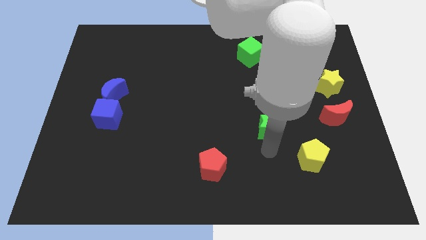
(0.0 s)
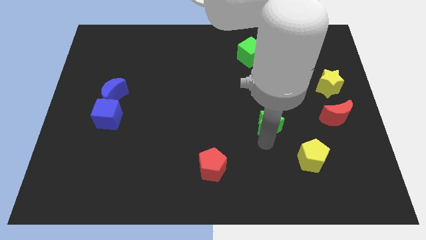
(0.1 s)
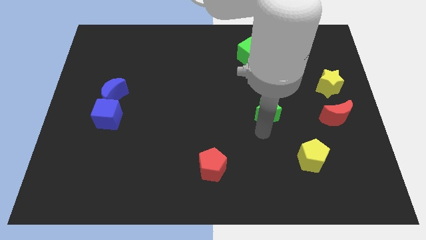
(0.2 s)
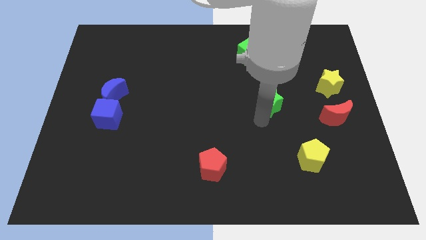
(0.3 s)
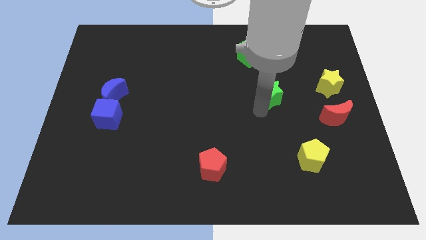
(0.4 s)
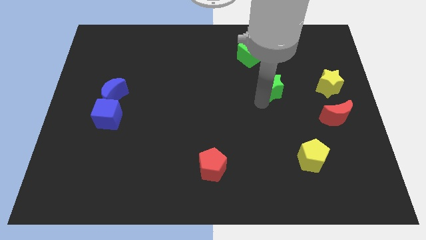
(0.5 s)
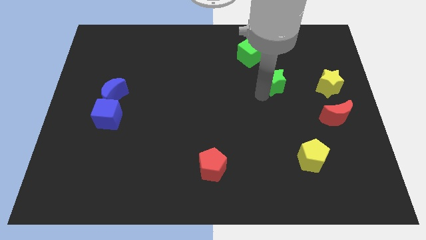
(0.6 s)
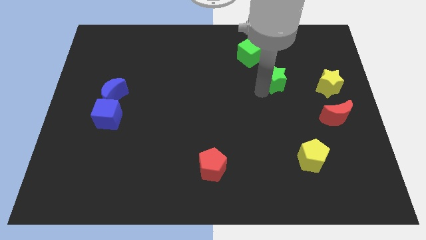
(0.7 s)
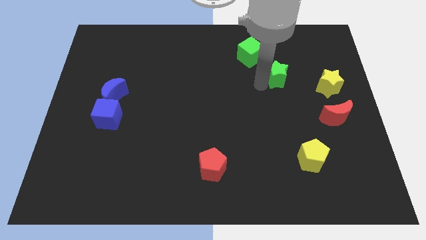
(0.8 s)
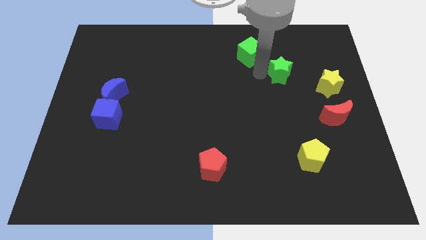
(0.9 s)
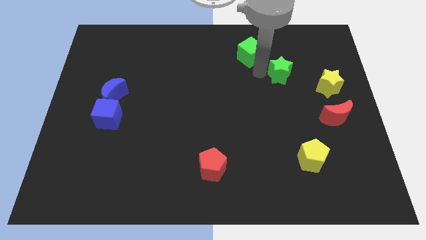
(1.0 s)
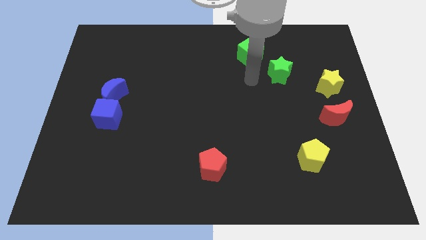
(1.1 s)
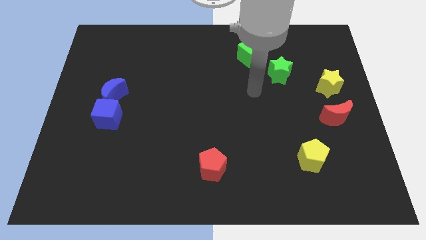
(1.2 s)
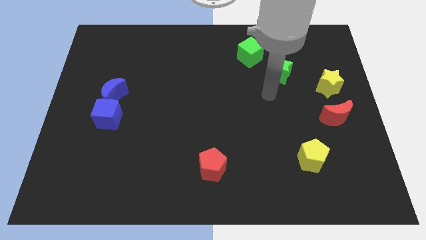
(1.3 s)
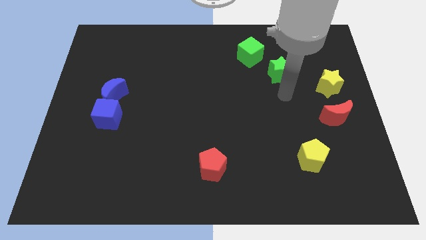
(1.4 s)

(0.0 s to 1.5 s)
push the green star to the bottom right side of the green cube

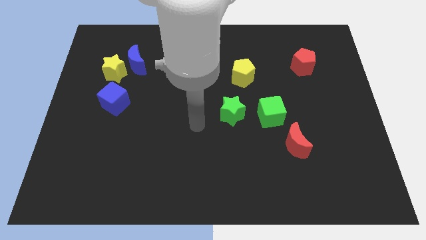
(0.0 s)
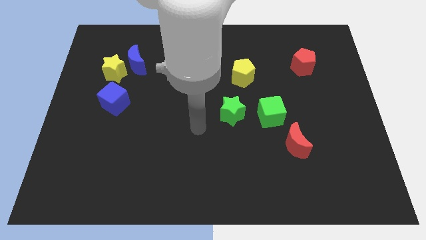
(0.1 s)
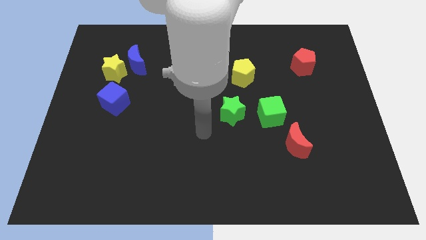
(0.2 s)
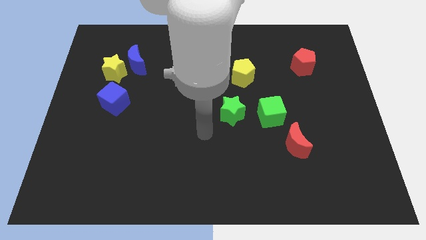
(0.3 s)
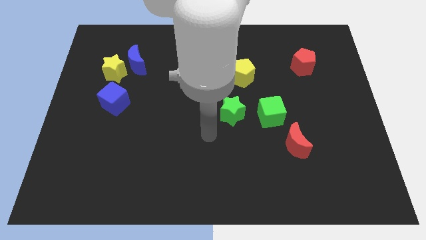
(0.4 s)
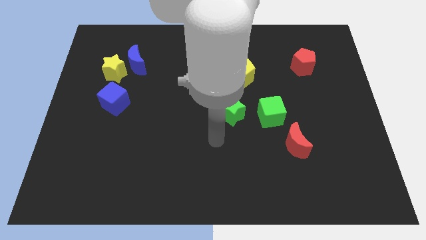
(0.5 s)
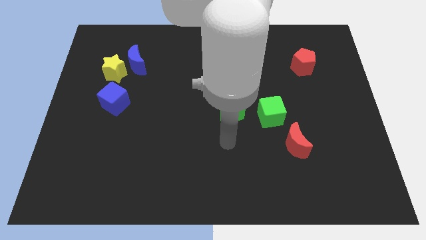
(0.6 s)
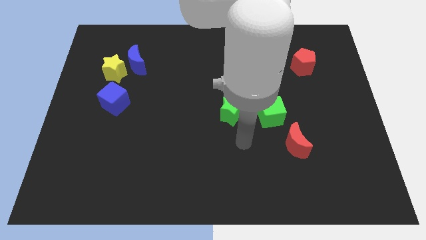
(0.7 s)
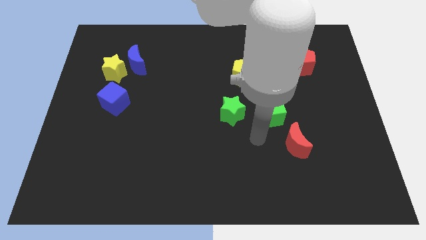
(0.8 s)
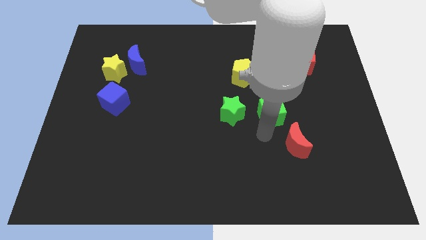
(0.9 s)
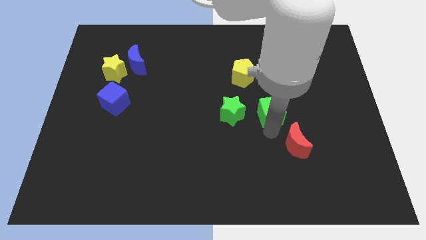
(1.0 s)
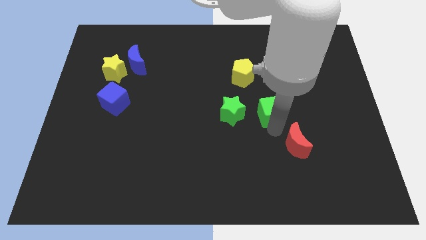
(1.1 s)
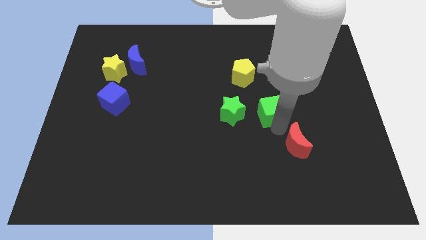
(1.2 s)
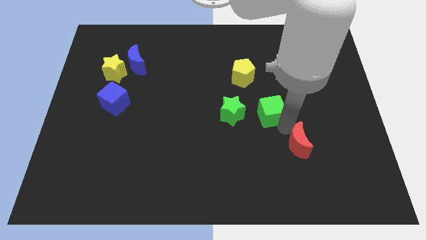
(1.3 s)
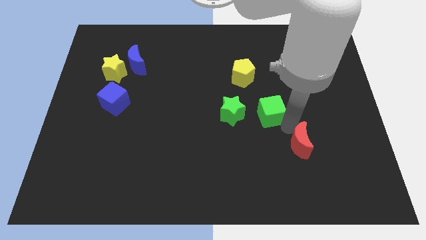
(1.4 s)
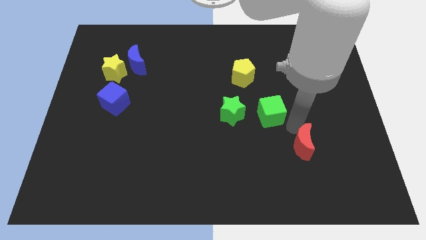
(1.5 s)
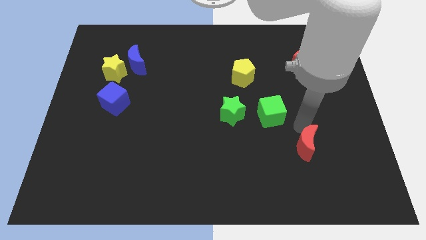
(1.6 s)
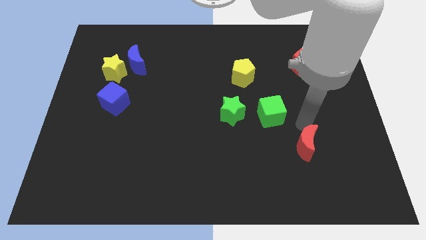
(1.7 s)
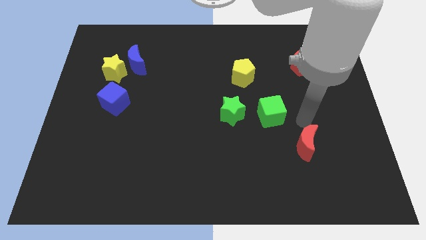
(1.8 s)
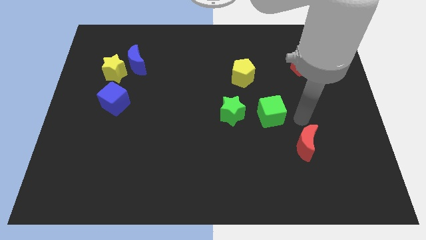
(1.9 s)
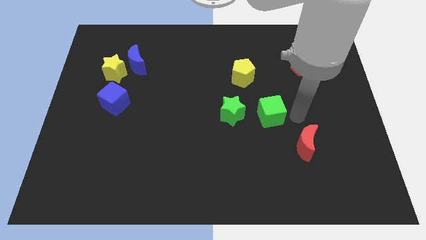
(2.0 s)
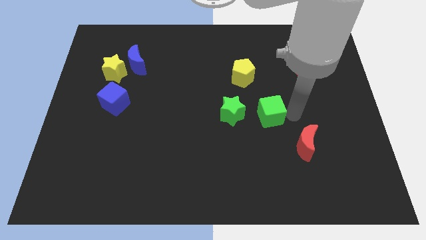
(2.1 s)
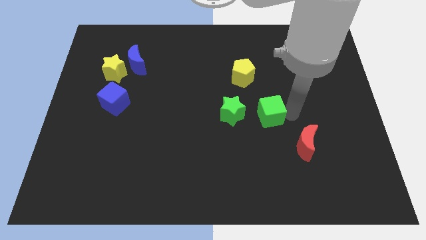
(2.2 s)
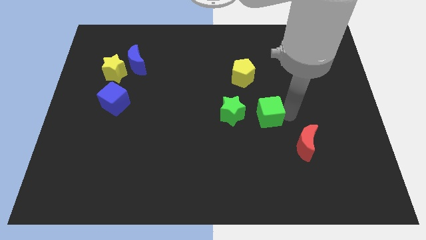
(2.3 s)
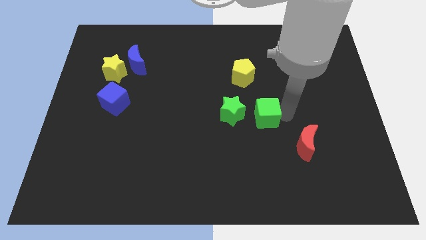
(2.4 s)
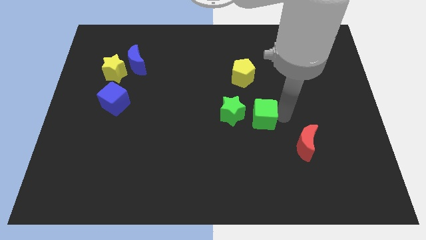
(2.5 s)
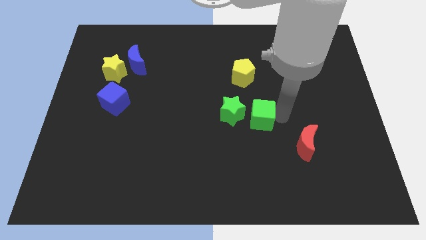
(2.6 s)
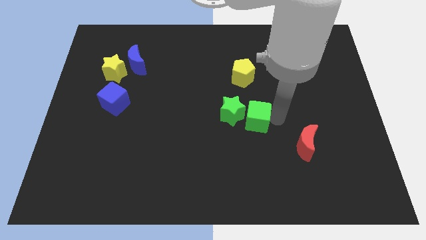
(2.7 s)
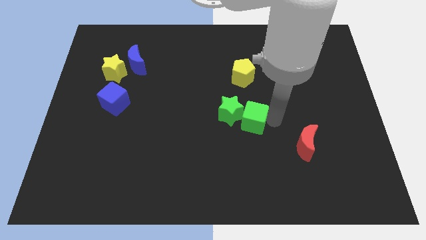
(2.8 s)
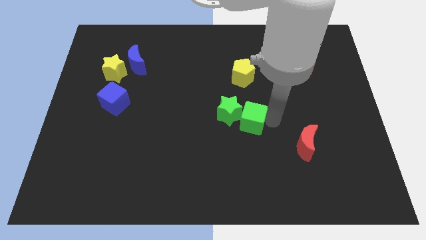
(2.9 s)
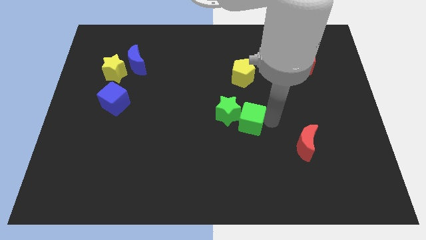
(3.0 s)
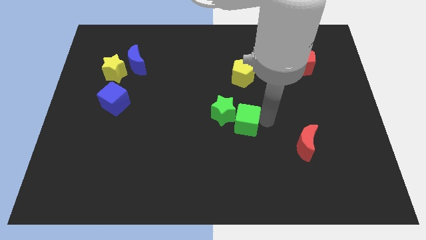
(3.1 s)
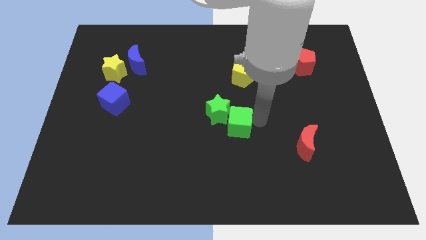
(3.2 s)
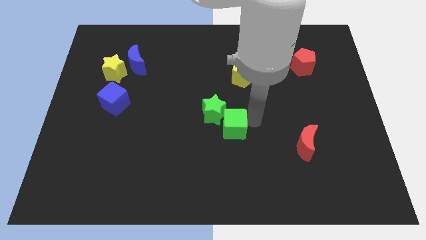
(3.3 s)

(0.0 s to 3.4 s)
move the both green blocks to the center

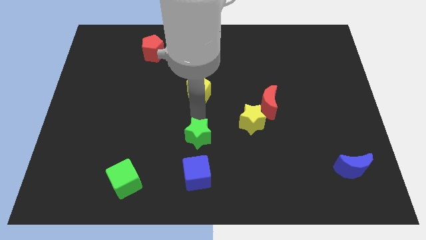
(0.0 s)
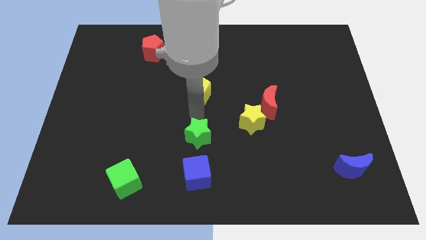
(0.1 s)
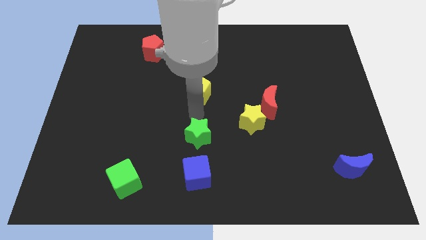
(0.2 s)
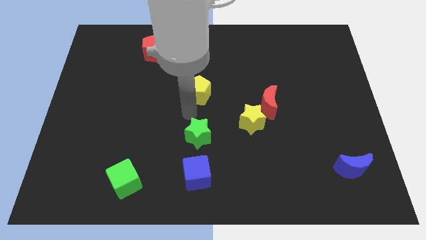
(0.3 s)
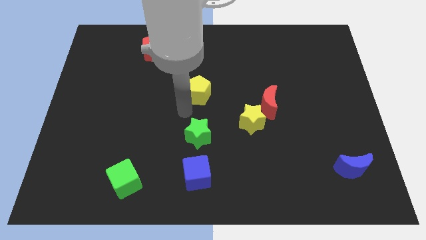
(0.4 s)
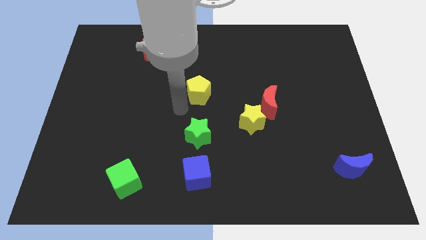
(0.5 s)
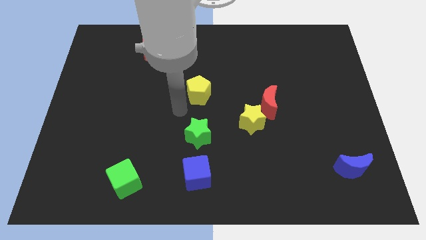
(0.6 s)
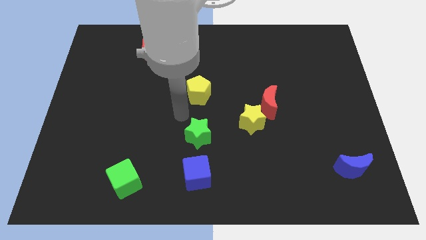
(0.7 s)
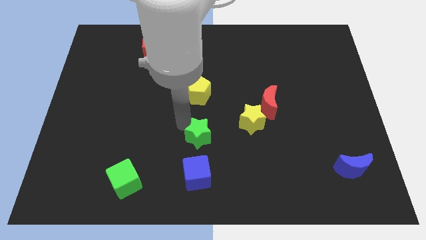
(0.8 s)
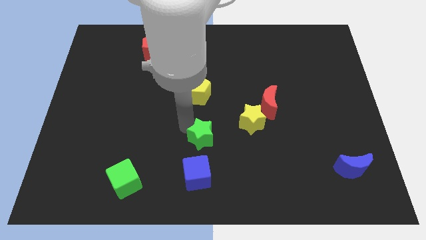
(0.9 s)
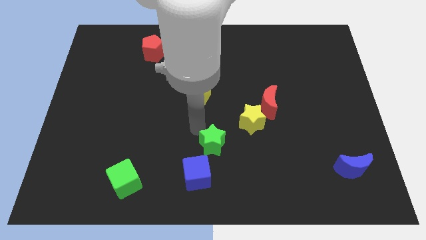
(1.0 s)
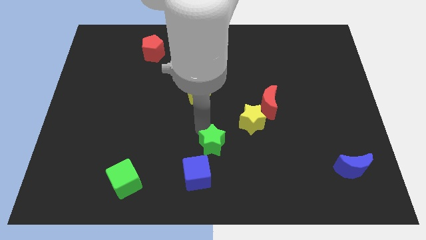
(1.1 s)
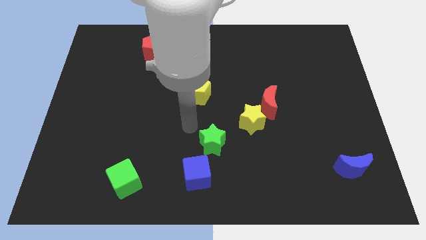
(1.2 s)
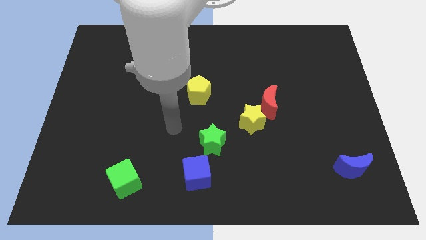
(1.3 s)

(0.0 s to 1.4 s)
push the green cube slightly to the right

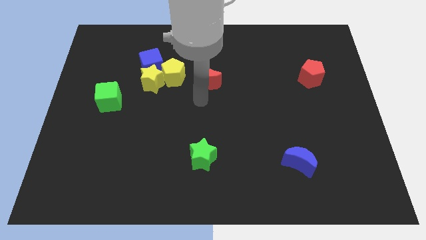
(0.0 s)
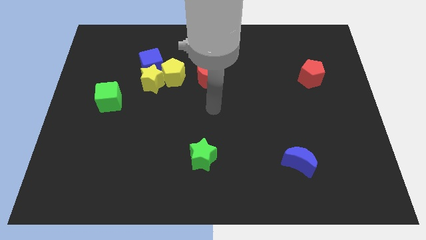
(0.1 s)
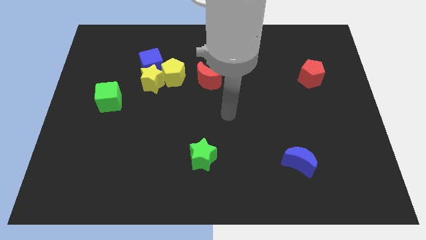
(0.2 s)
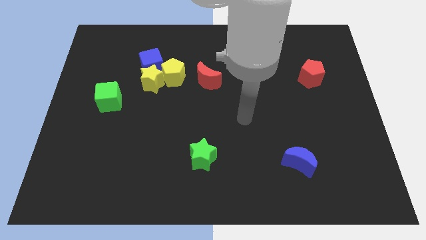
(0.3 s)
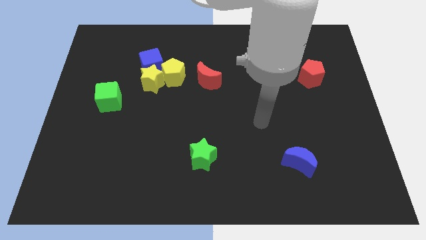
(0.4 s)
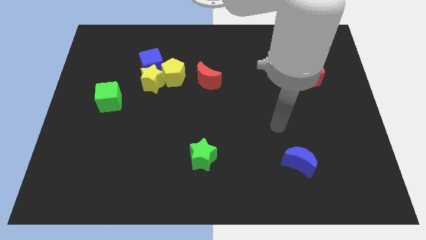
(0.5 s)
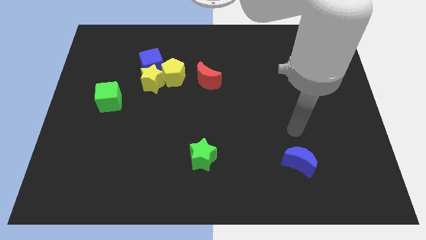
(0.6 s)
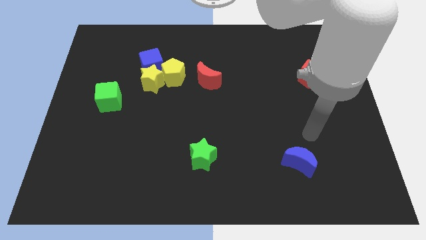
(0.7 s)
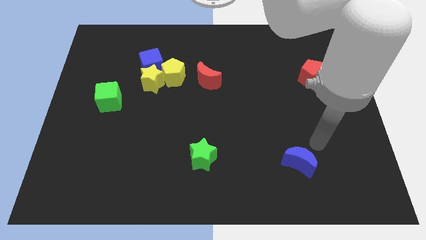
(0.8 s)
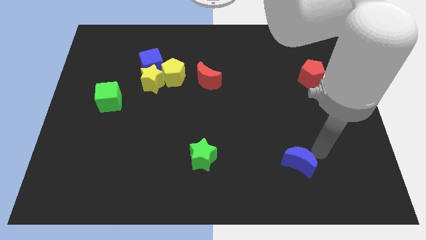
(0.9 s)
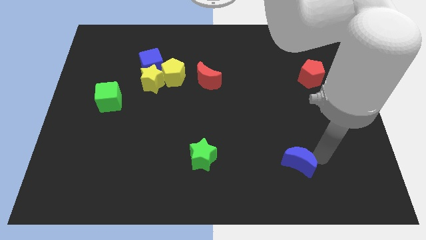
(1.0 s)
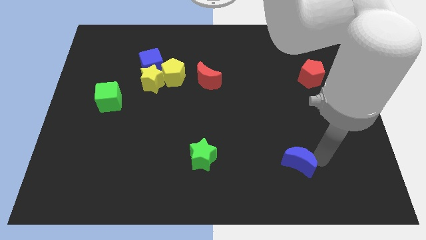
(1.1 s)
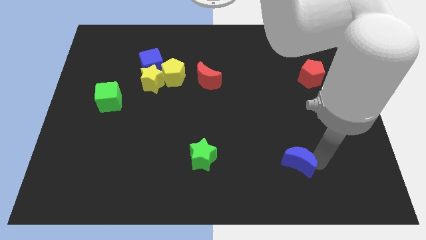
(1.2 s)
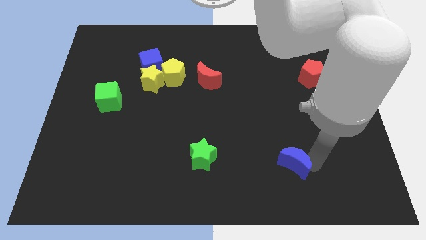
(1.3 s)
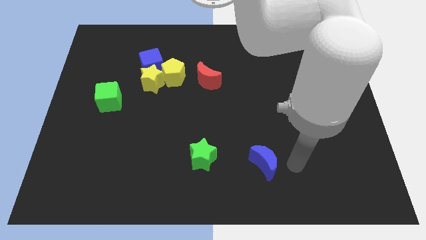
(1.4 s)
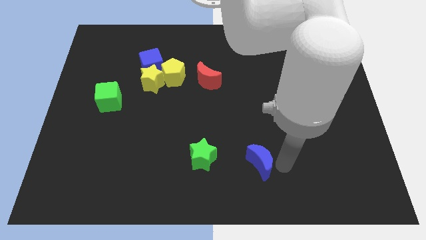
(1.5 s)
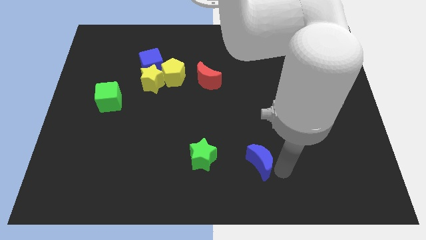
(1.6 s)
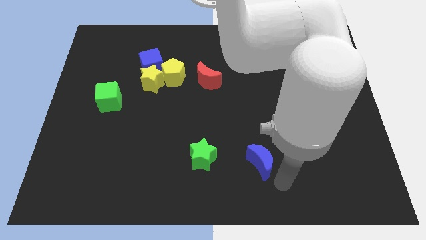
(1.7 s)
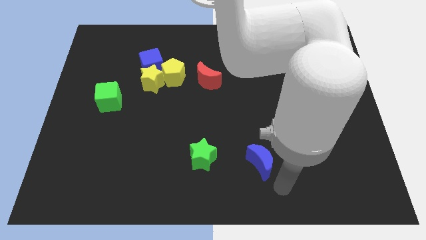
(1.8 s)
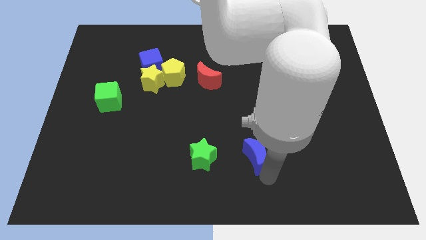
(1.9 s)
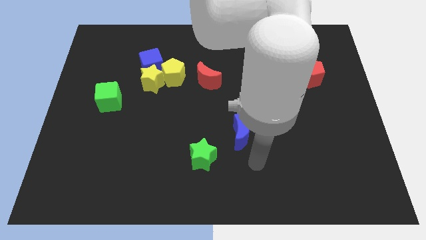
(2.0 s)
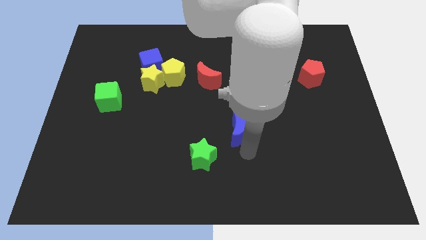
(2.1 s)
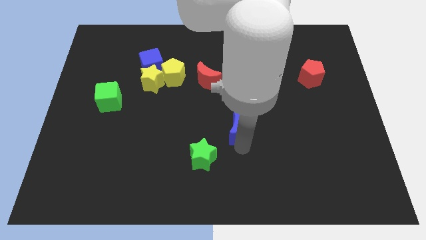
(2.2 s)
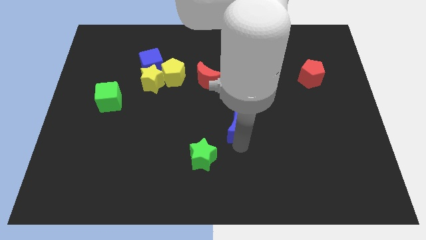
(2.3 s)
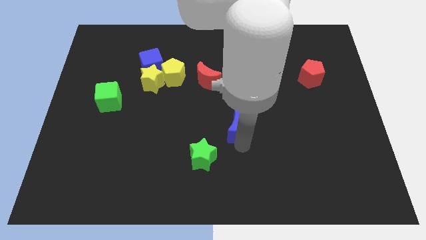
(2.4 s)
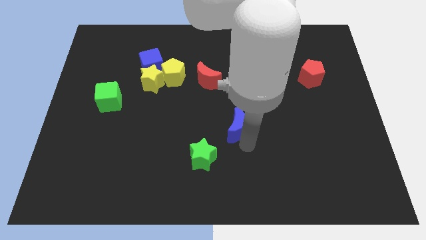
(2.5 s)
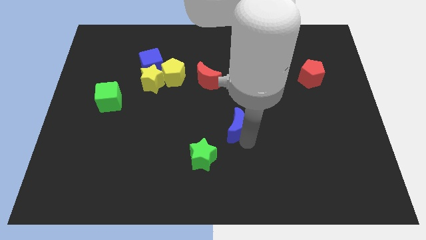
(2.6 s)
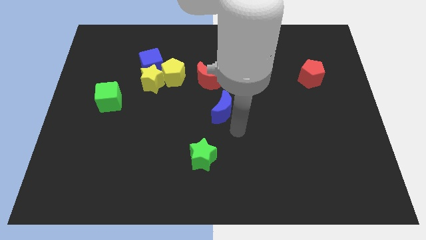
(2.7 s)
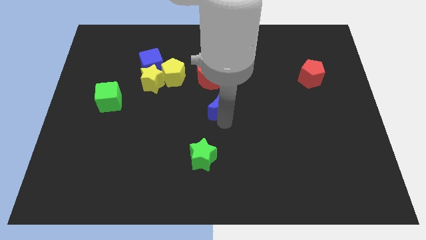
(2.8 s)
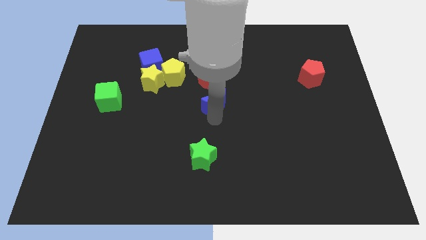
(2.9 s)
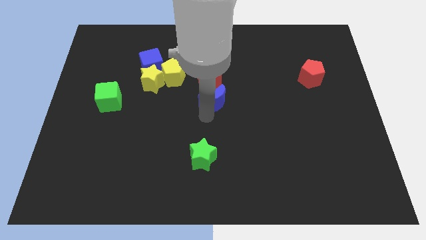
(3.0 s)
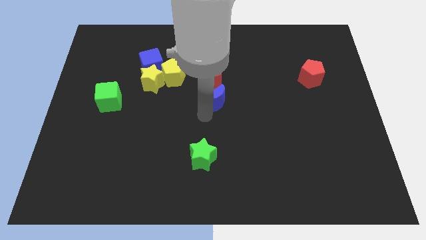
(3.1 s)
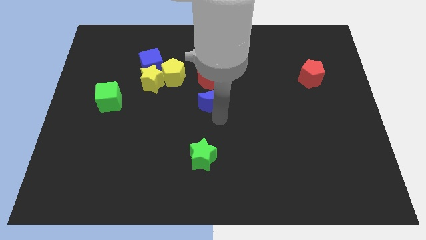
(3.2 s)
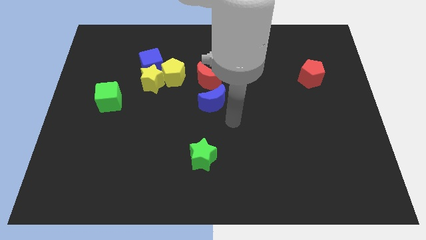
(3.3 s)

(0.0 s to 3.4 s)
place the blue crescent vertically parallel to the green star
